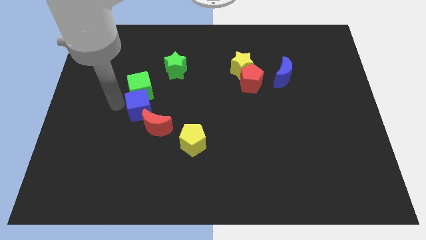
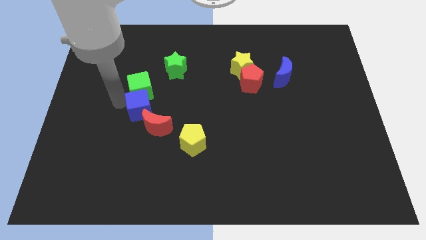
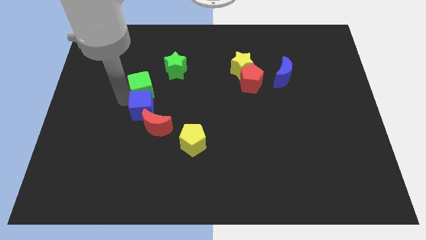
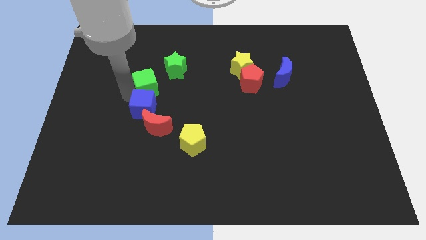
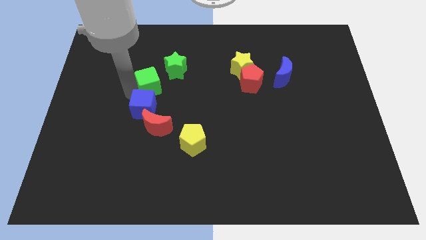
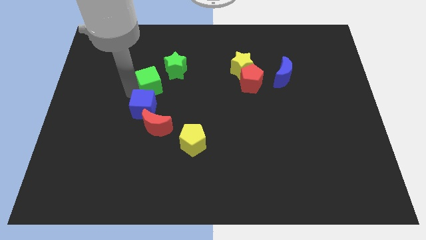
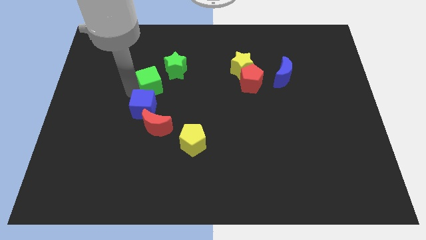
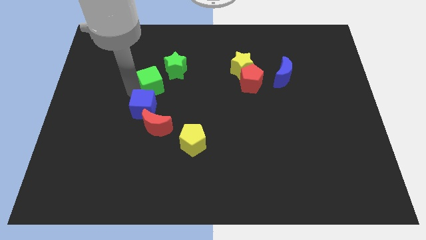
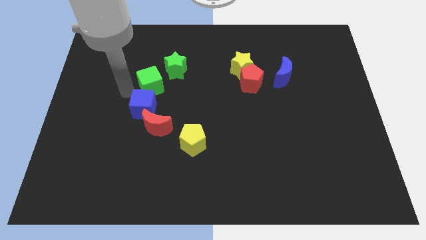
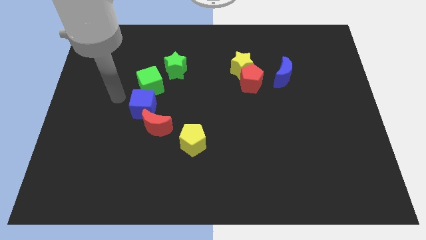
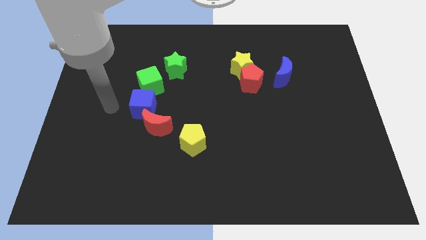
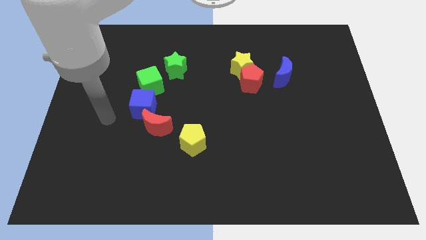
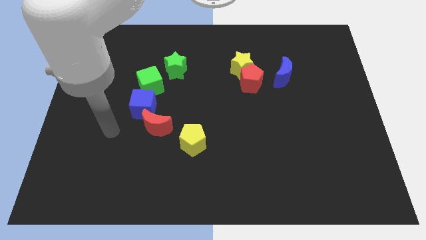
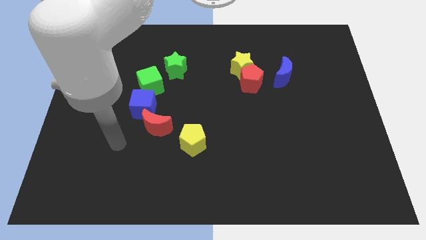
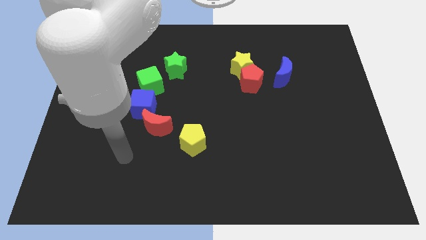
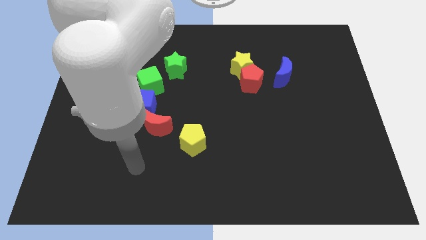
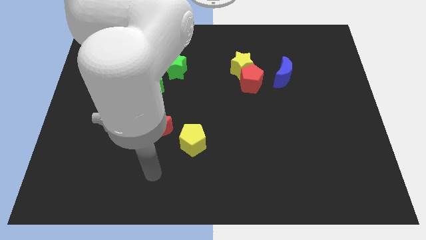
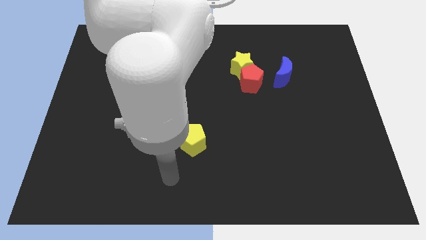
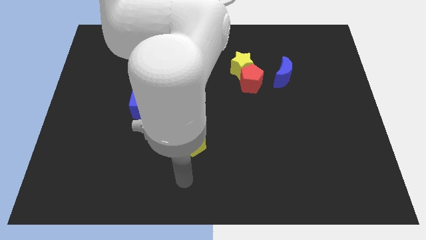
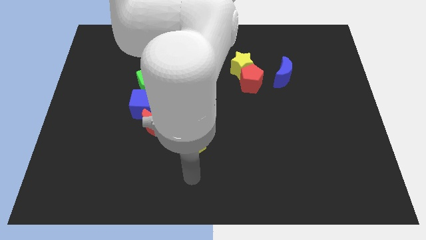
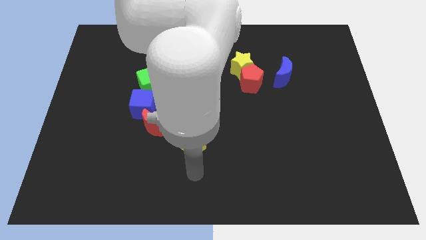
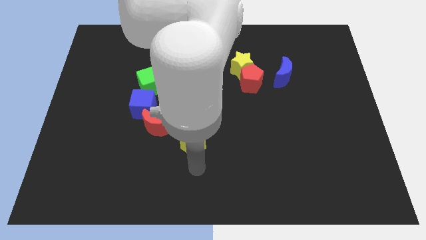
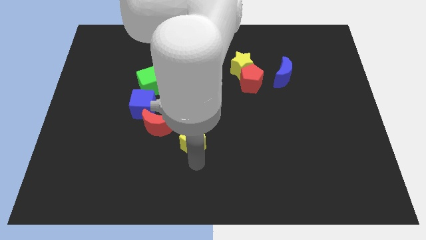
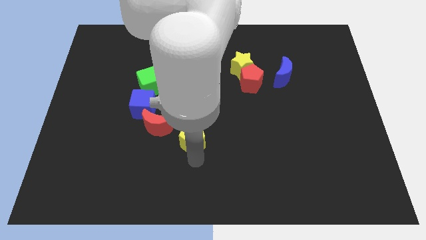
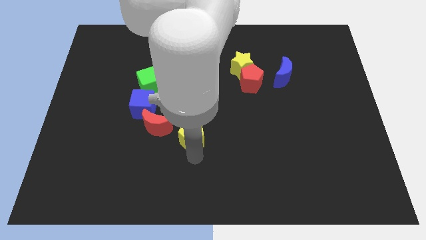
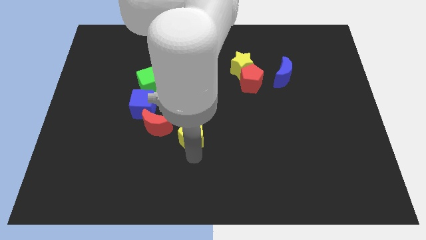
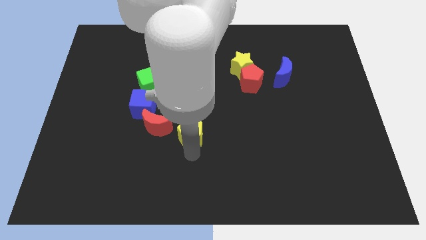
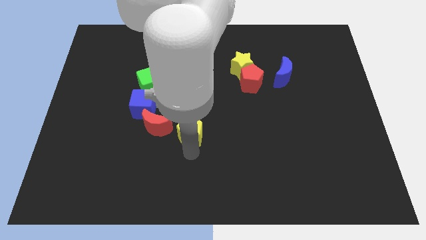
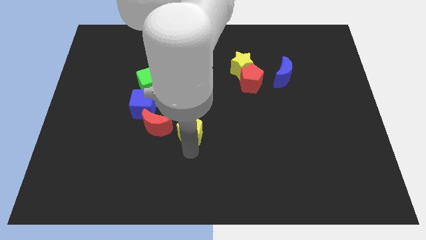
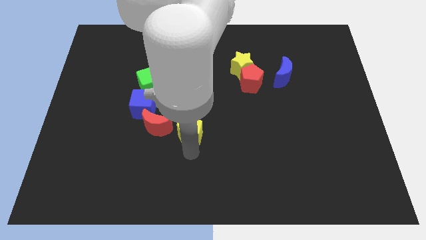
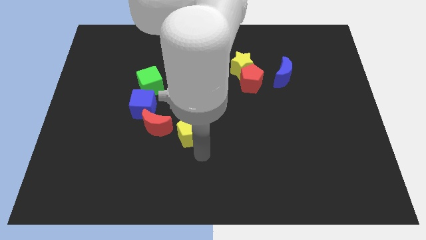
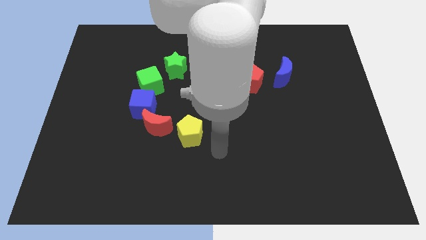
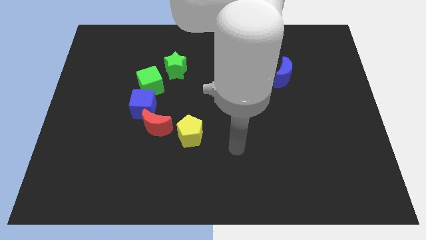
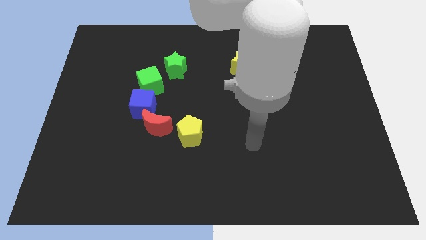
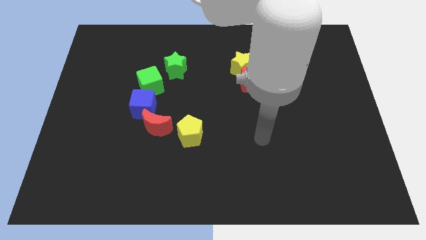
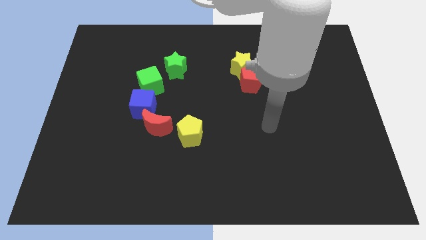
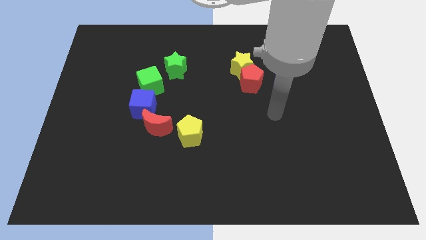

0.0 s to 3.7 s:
slightly move the group of cubes to the right

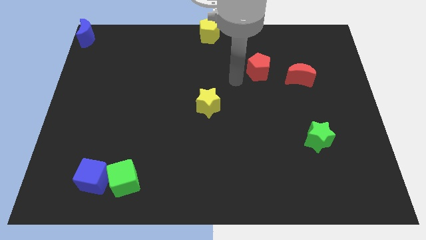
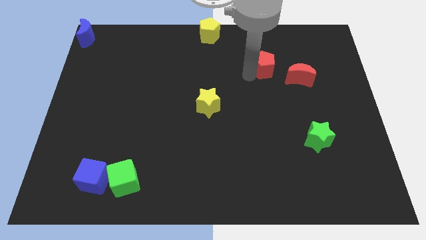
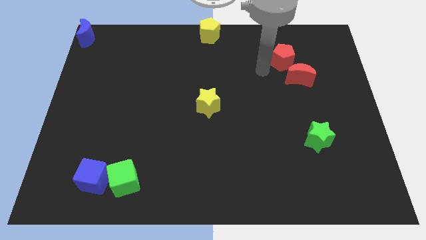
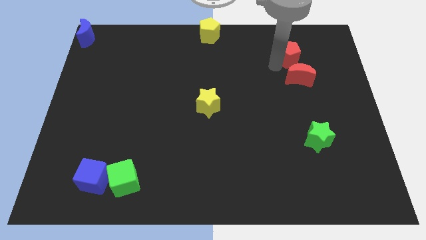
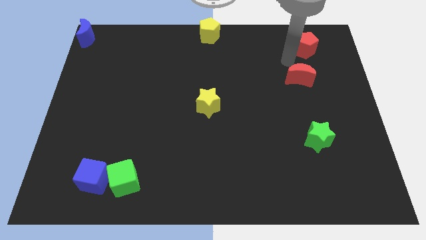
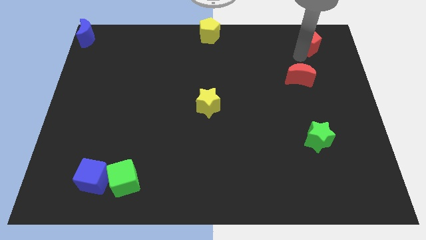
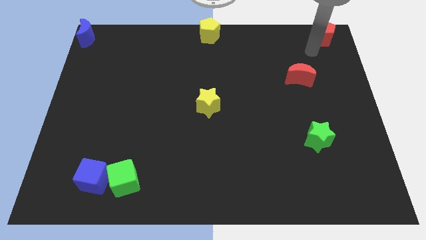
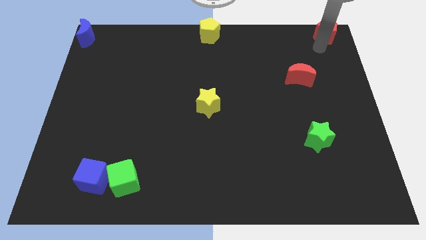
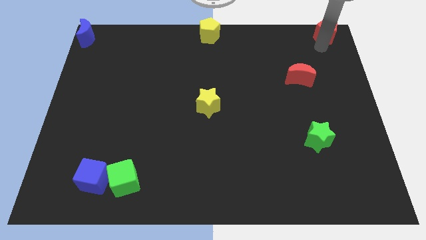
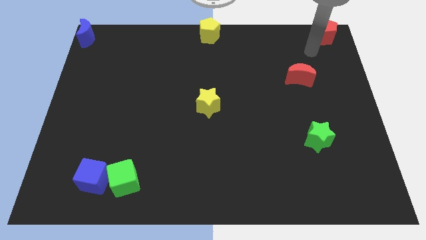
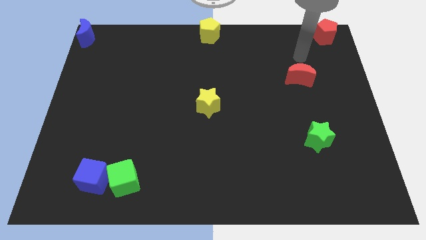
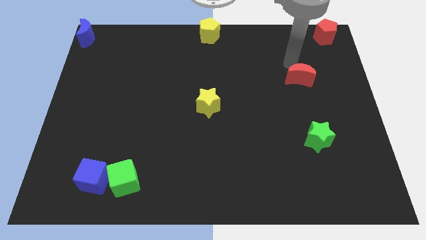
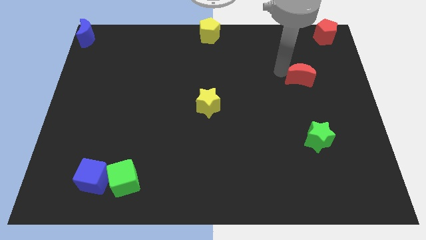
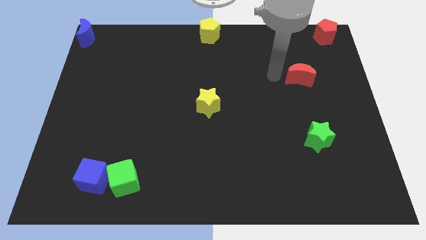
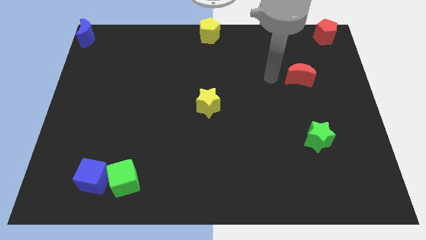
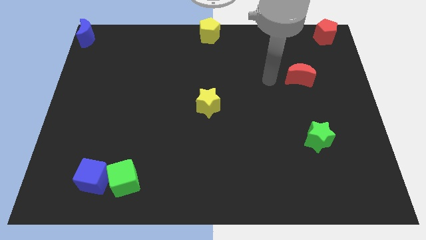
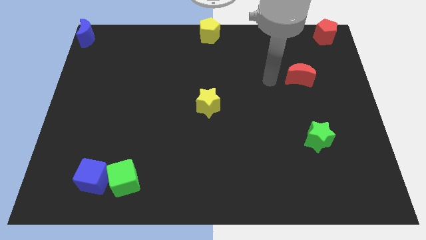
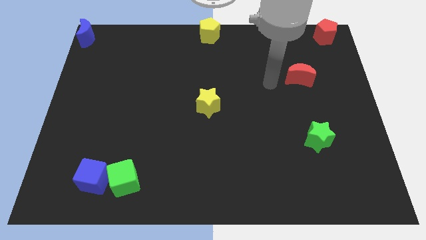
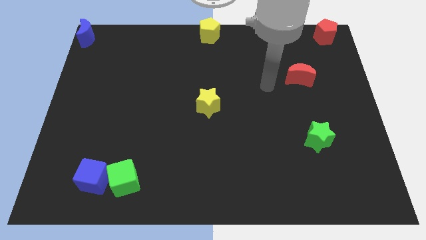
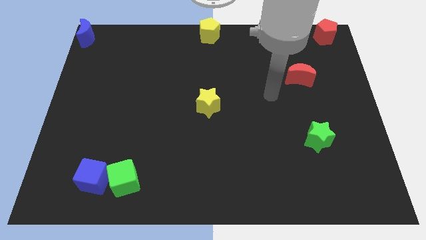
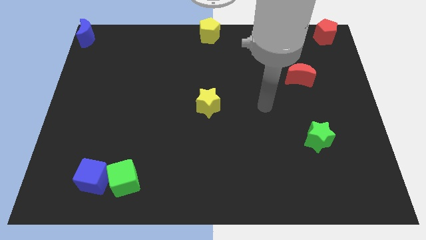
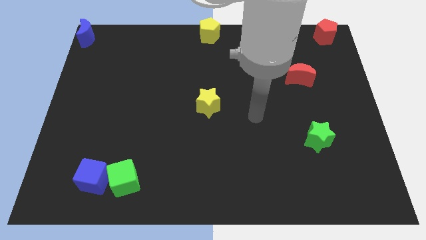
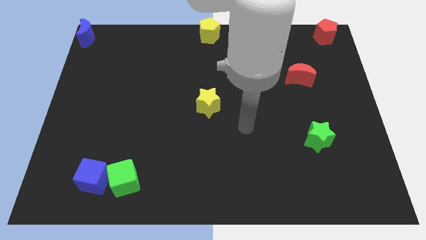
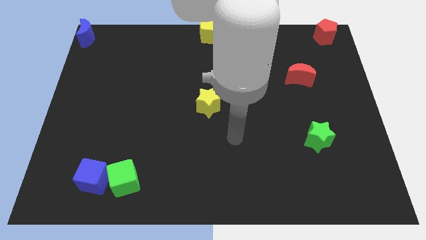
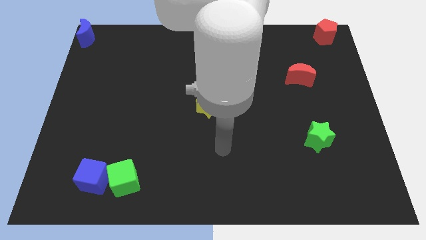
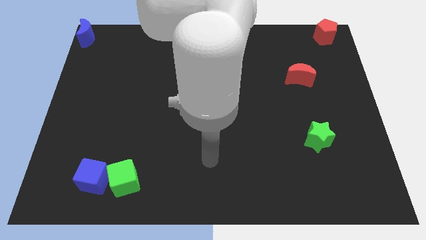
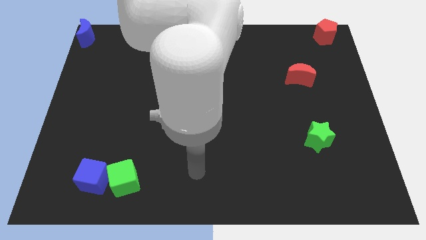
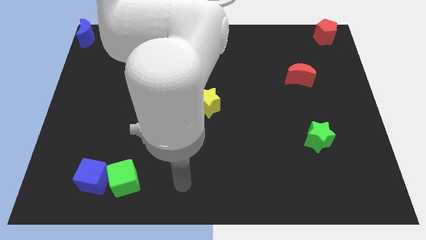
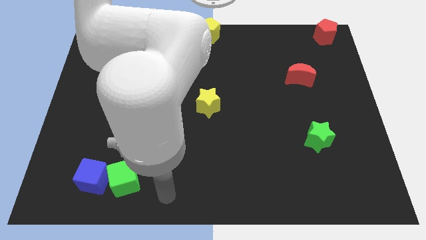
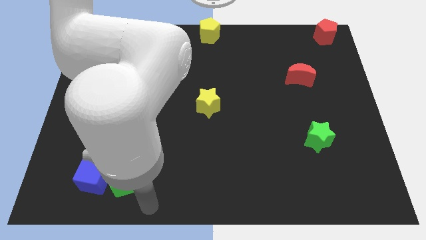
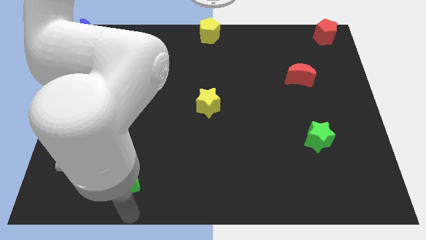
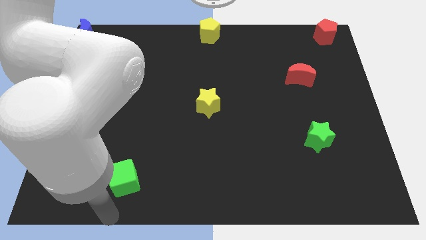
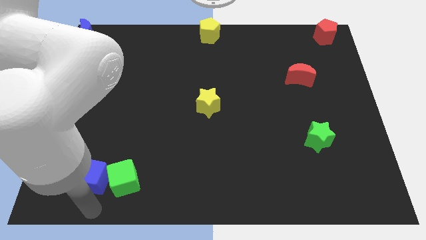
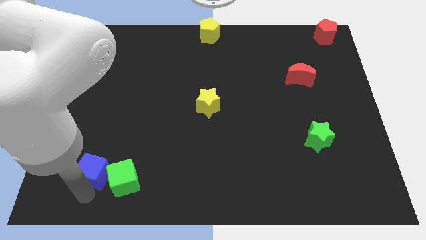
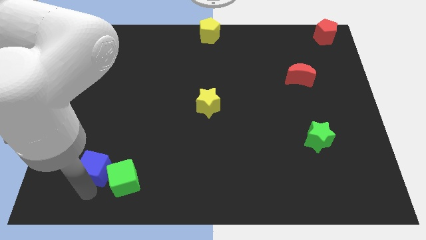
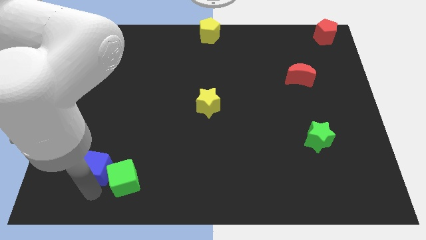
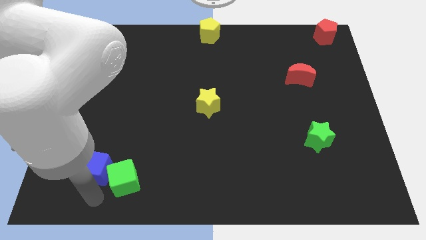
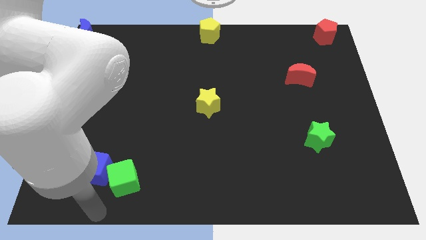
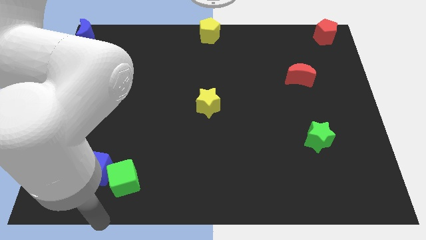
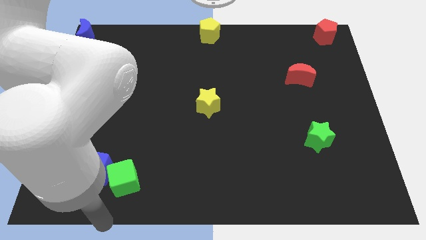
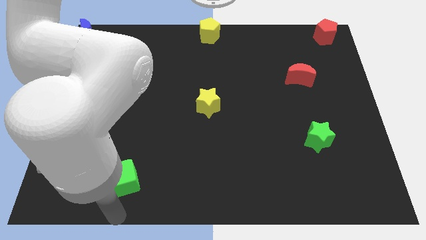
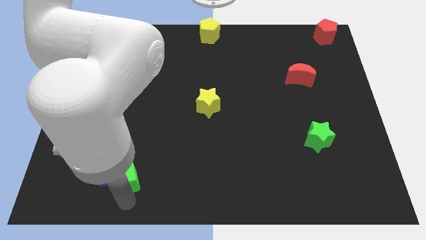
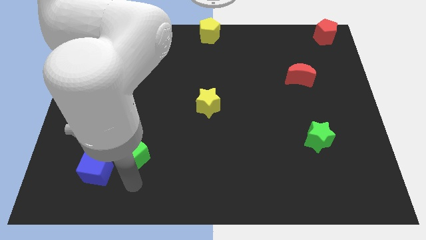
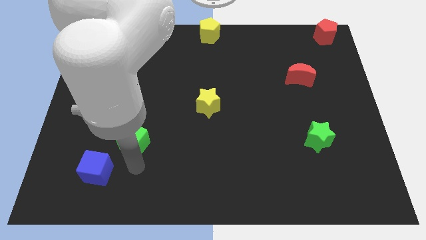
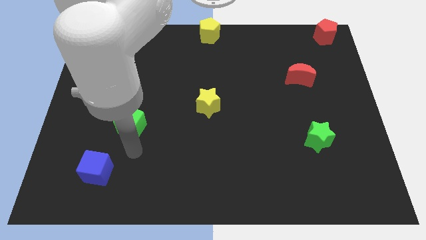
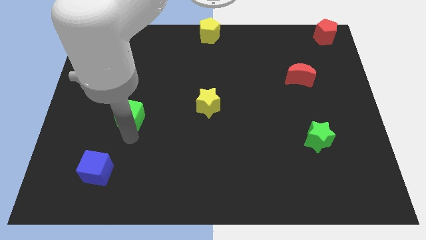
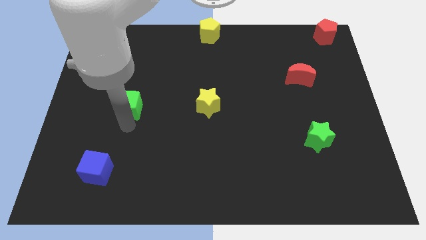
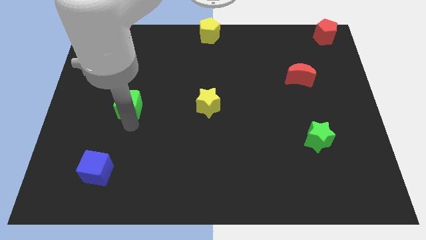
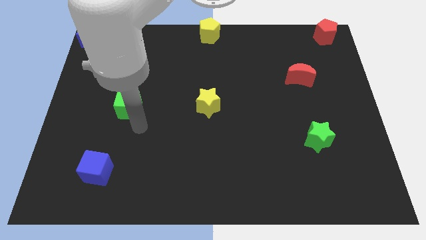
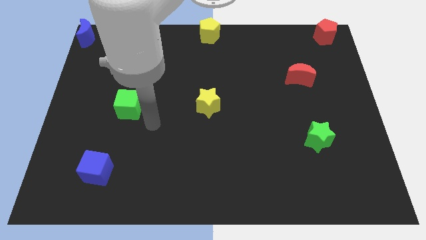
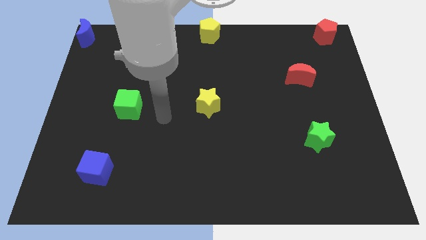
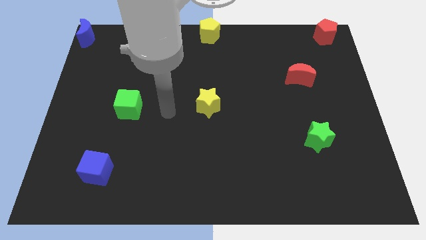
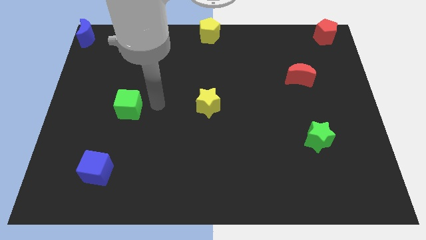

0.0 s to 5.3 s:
place the green cube to the left of the yellow star
